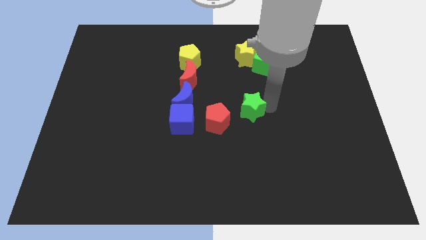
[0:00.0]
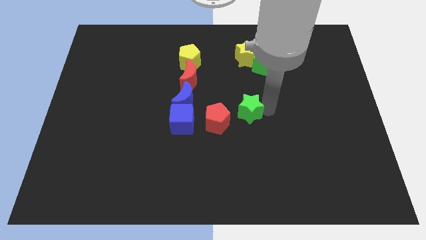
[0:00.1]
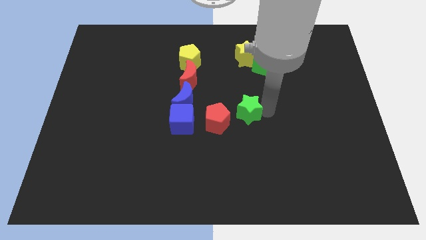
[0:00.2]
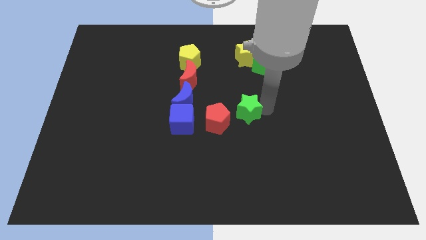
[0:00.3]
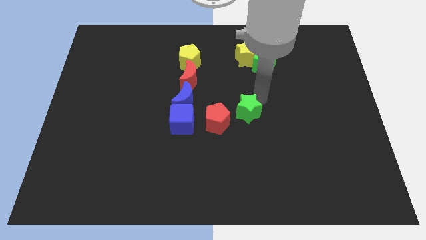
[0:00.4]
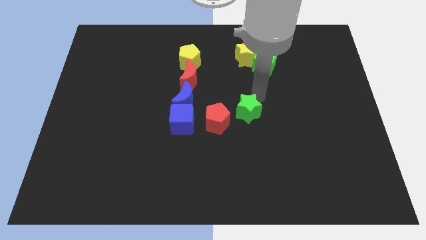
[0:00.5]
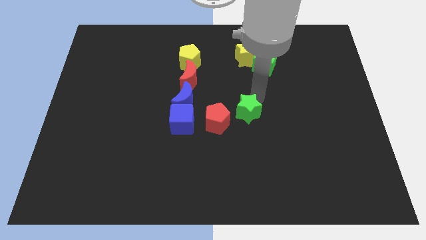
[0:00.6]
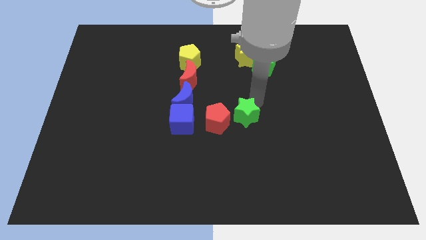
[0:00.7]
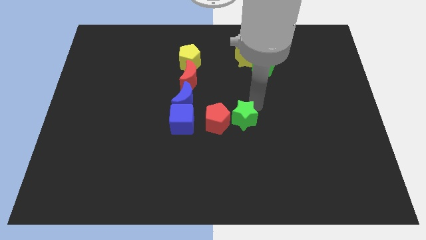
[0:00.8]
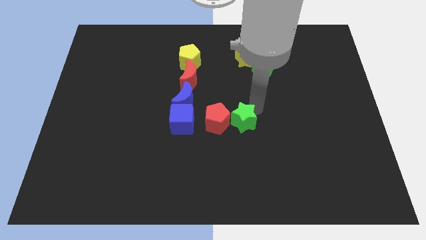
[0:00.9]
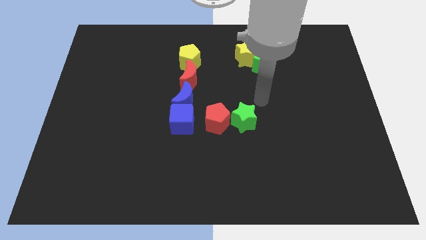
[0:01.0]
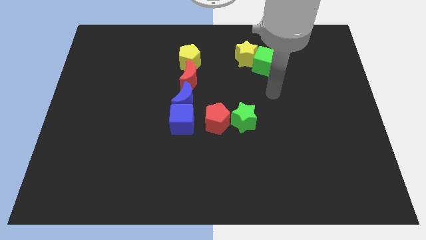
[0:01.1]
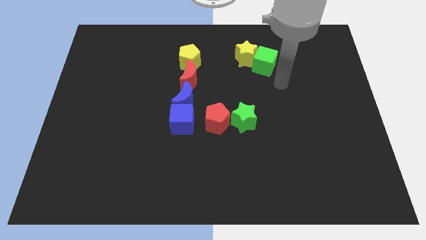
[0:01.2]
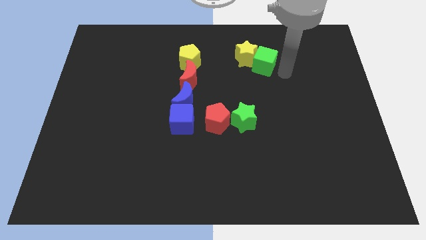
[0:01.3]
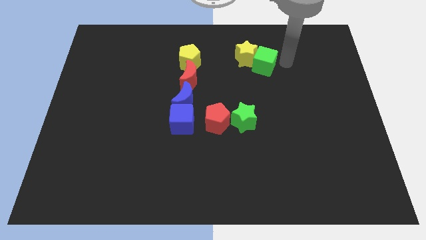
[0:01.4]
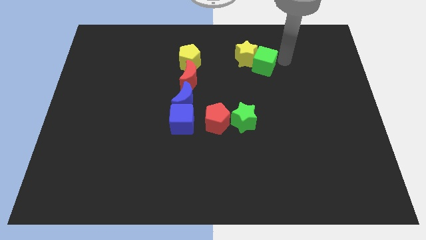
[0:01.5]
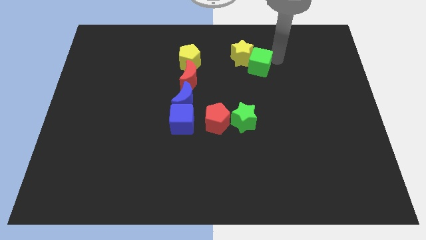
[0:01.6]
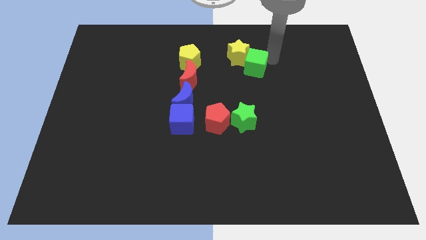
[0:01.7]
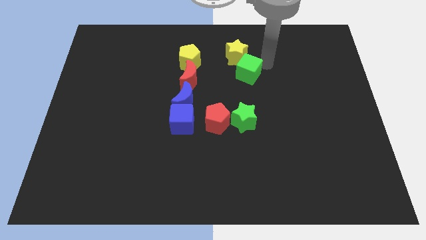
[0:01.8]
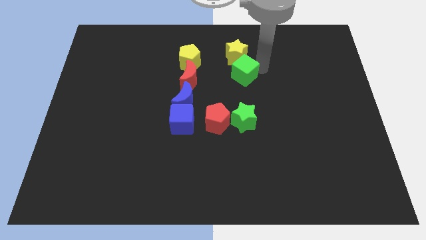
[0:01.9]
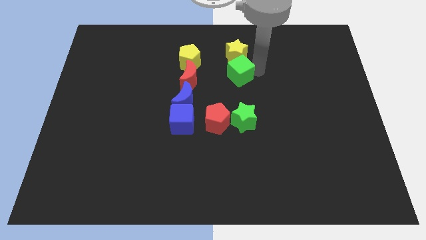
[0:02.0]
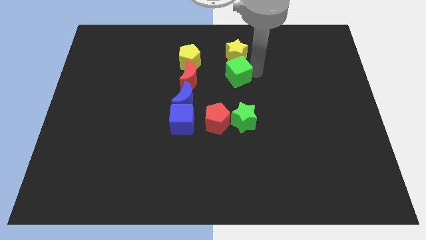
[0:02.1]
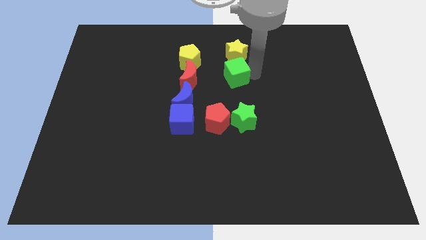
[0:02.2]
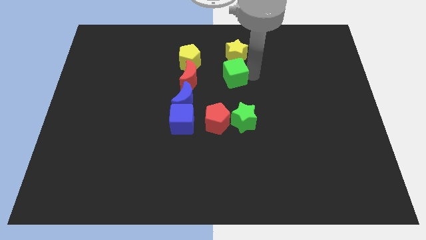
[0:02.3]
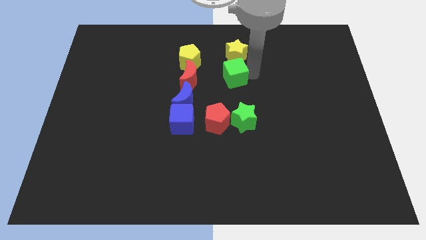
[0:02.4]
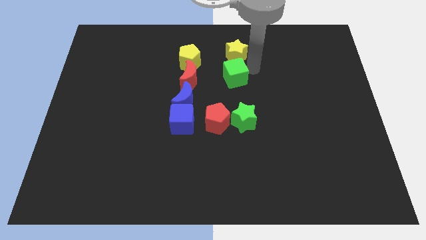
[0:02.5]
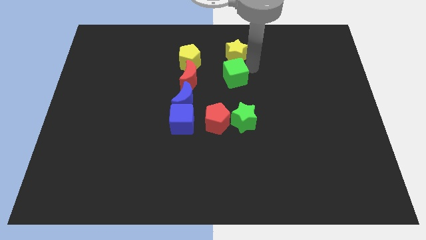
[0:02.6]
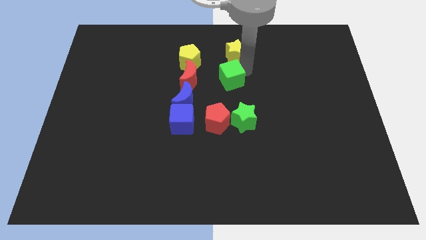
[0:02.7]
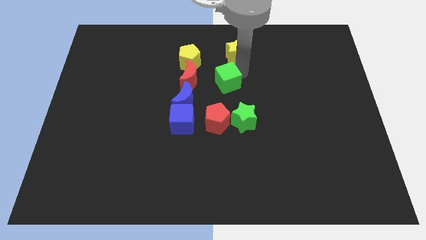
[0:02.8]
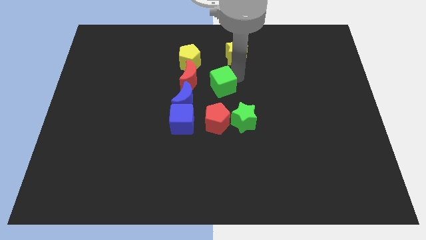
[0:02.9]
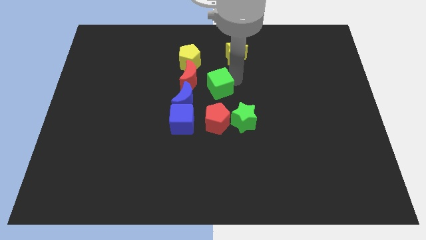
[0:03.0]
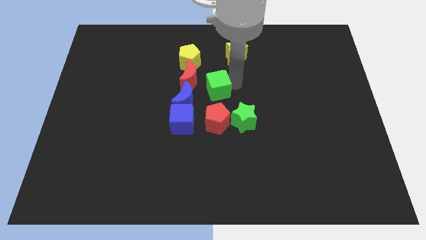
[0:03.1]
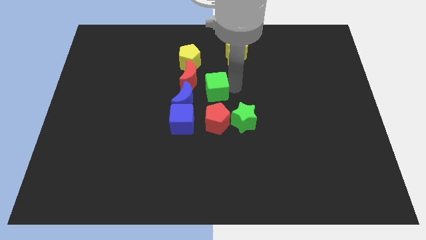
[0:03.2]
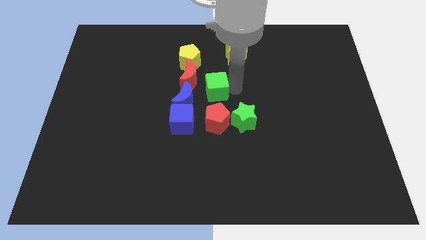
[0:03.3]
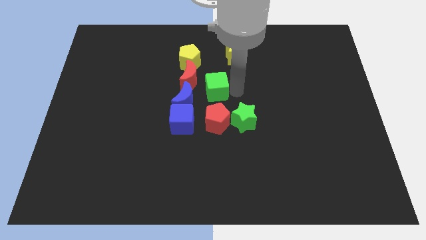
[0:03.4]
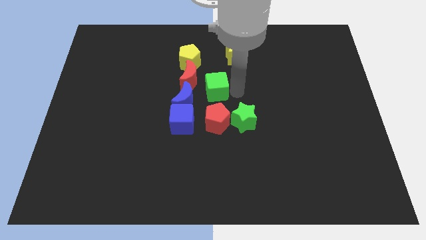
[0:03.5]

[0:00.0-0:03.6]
put the green star to the right of red pentagon

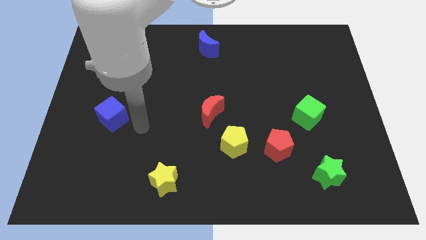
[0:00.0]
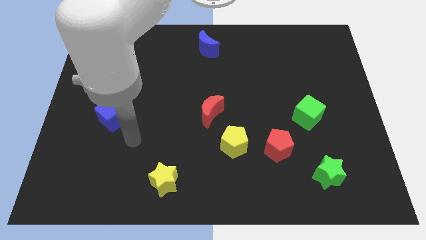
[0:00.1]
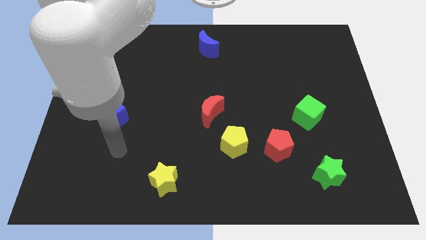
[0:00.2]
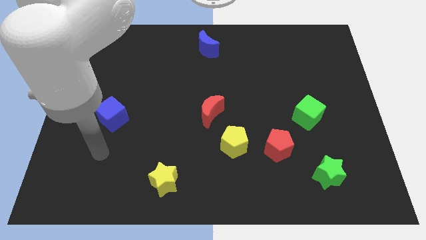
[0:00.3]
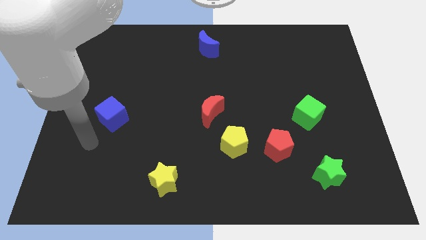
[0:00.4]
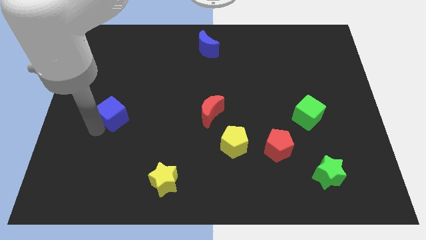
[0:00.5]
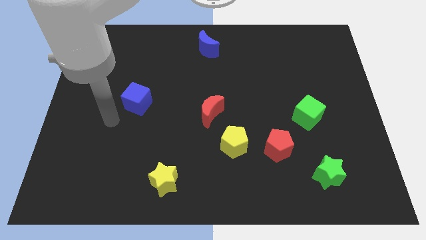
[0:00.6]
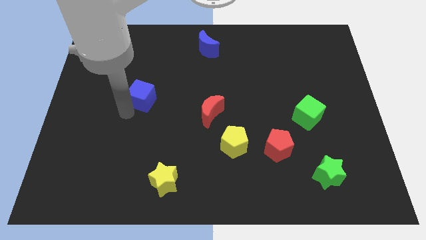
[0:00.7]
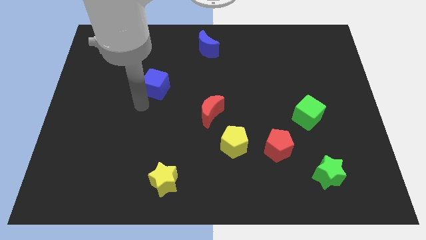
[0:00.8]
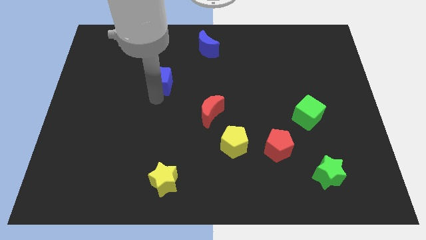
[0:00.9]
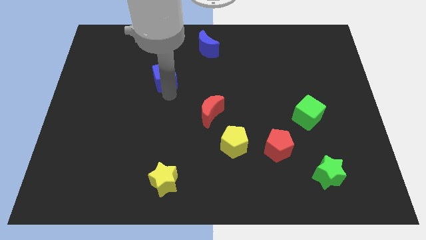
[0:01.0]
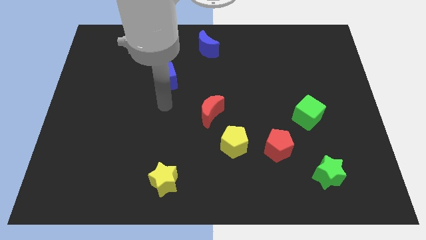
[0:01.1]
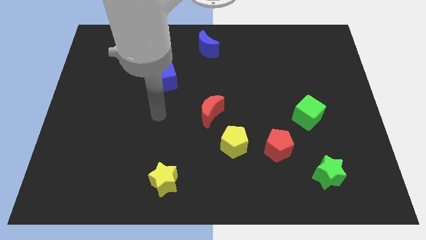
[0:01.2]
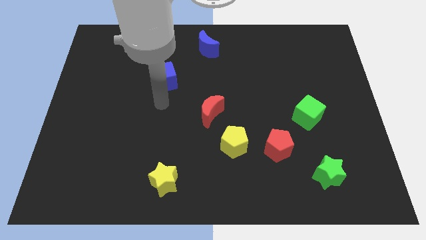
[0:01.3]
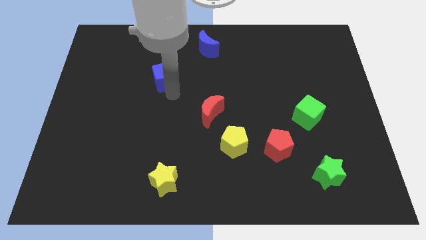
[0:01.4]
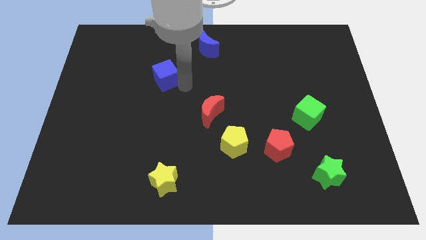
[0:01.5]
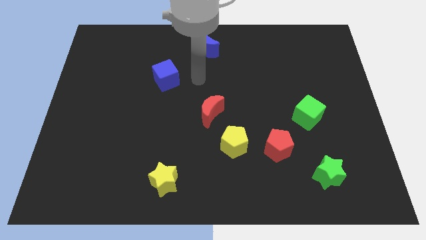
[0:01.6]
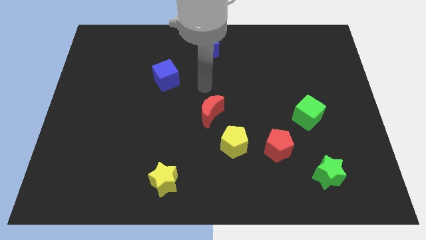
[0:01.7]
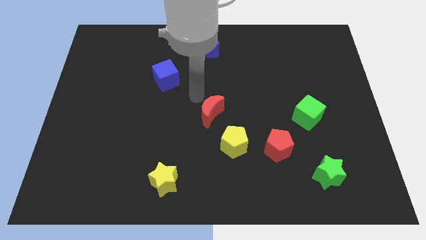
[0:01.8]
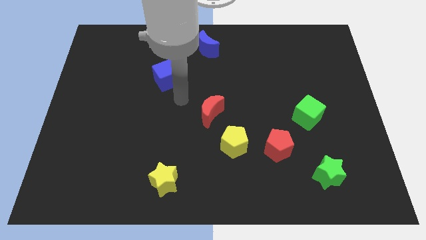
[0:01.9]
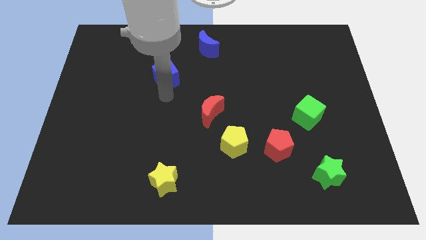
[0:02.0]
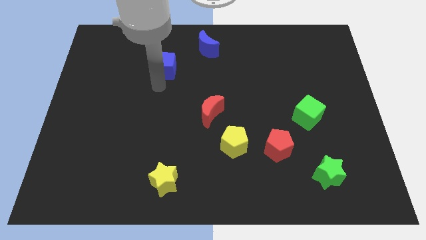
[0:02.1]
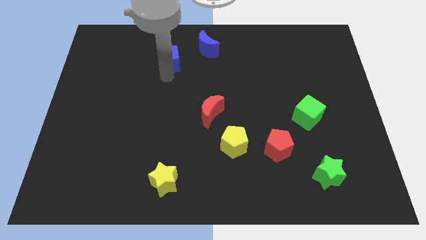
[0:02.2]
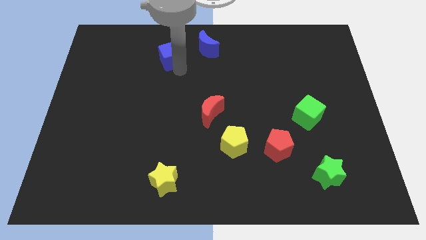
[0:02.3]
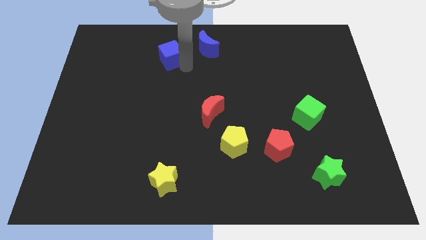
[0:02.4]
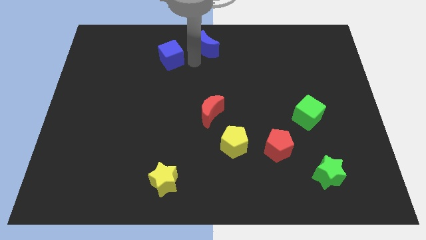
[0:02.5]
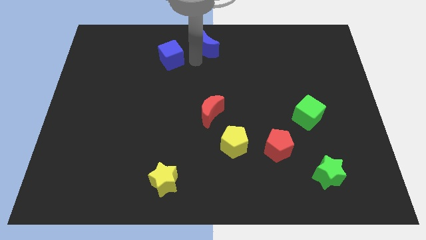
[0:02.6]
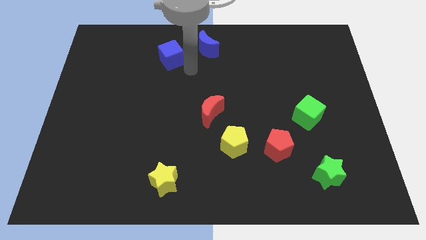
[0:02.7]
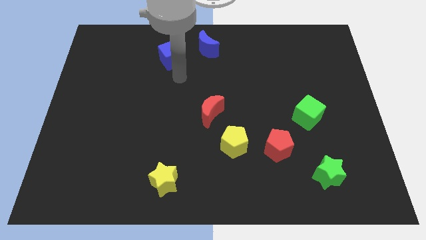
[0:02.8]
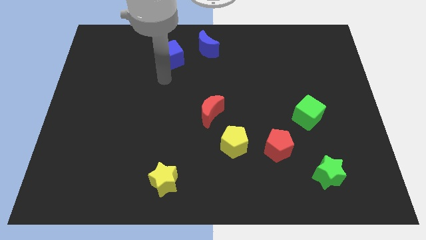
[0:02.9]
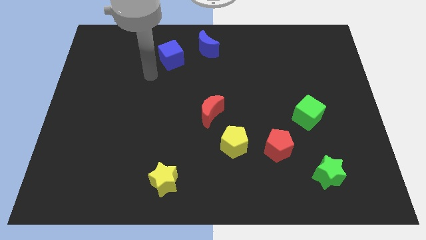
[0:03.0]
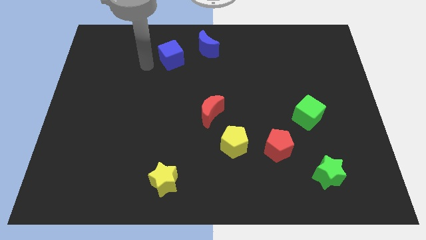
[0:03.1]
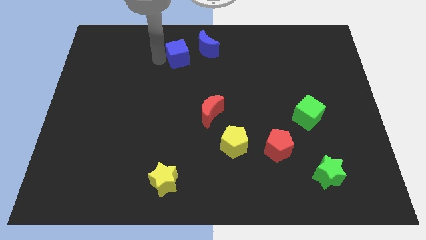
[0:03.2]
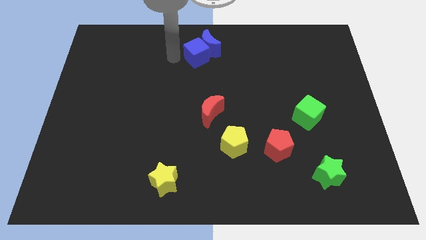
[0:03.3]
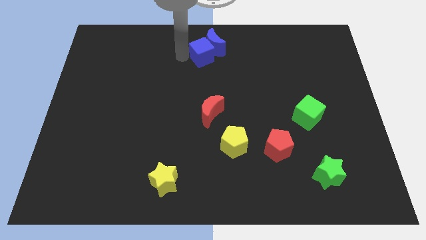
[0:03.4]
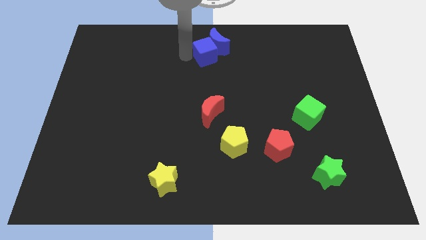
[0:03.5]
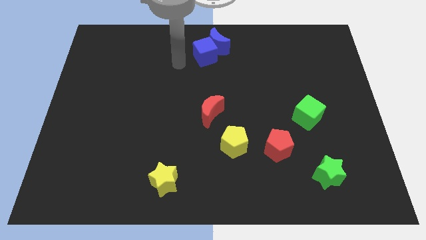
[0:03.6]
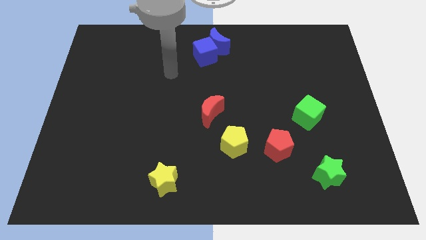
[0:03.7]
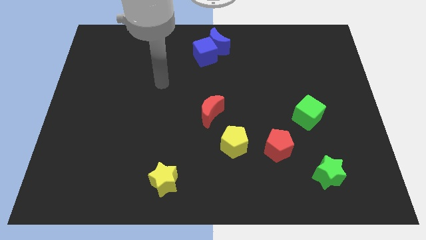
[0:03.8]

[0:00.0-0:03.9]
push the blue cube into the blue crescent

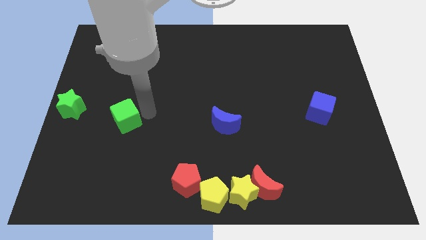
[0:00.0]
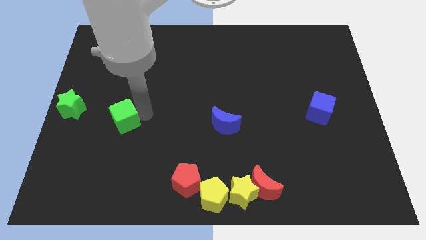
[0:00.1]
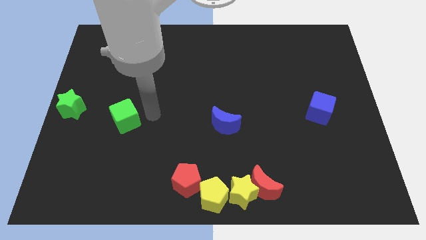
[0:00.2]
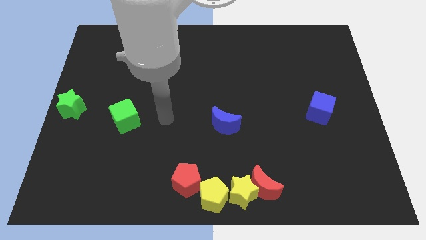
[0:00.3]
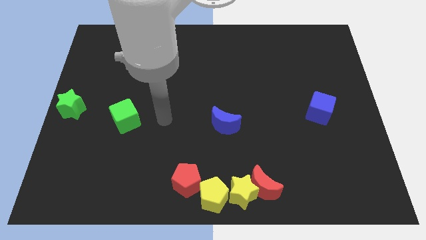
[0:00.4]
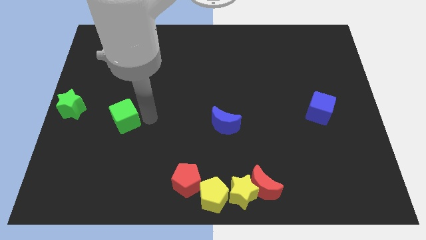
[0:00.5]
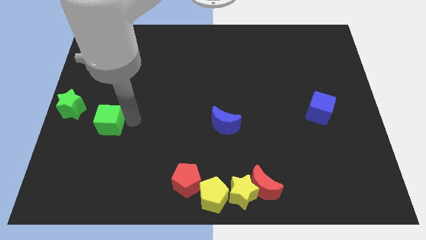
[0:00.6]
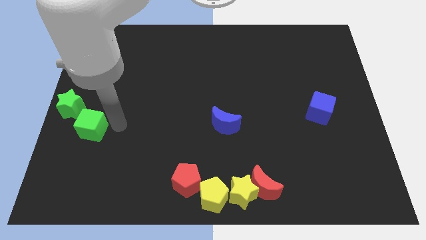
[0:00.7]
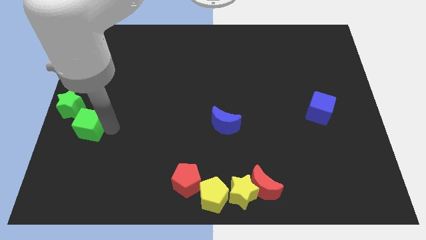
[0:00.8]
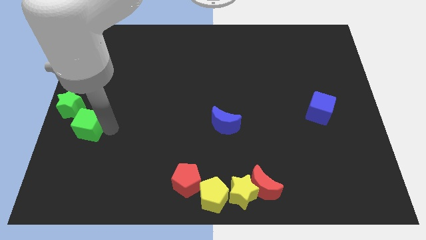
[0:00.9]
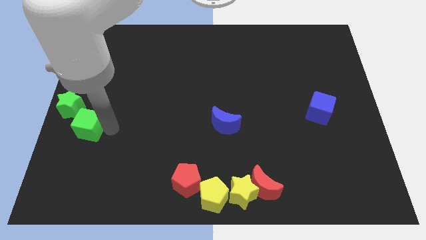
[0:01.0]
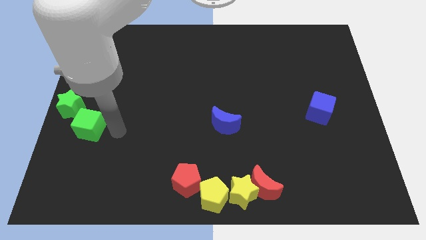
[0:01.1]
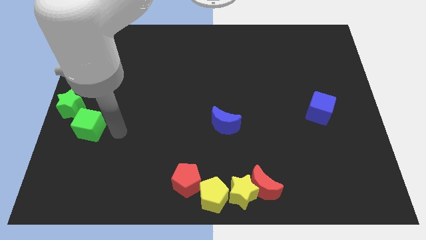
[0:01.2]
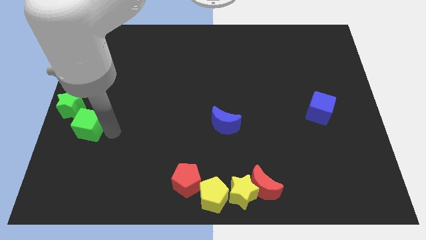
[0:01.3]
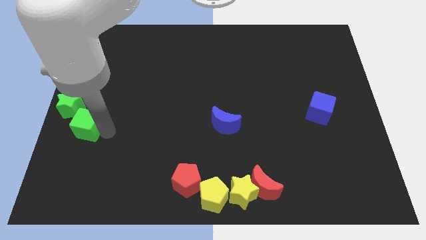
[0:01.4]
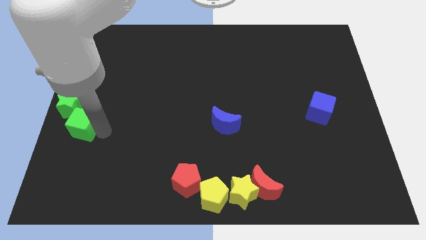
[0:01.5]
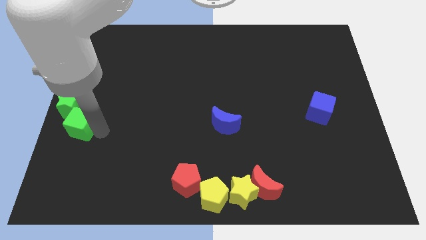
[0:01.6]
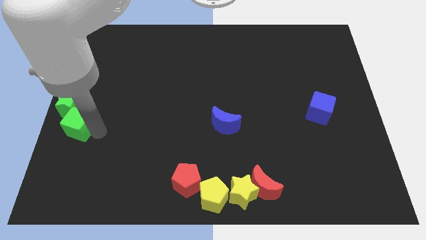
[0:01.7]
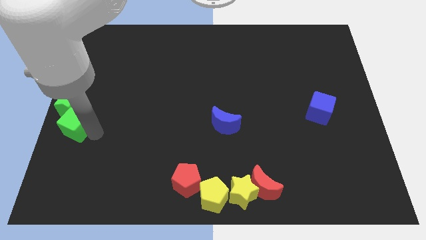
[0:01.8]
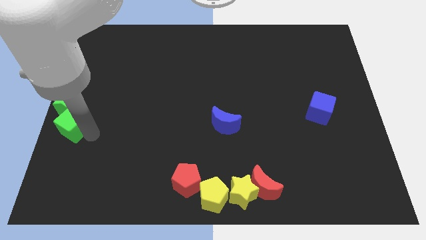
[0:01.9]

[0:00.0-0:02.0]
place the green cube below the green star
